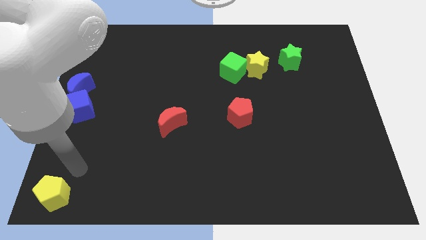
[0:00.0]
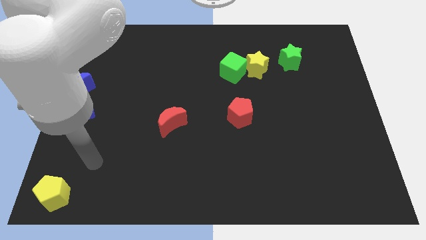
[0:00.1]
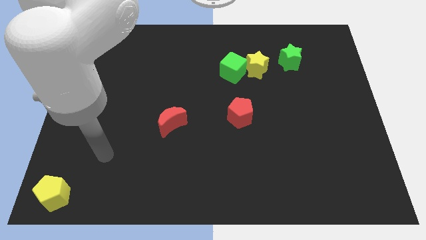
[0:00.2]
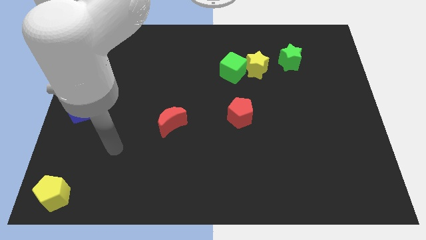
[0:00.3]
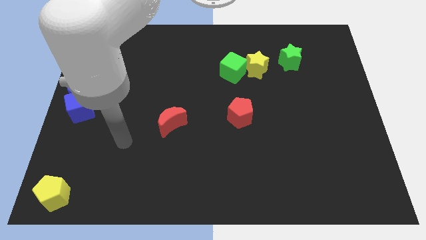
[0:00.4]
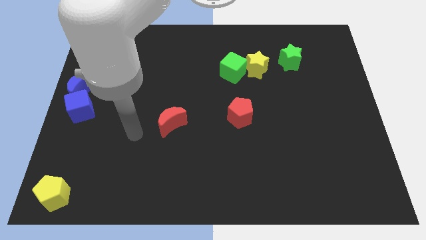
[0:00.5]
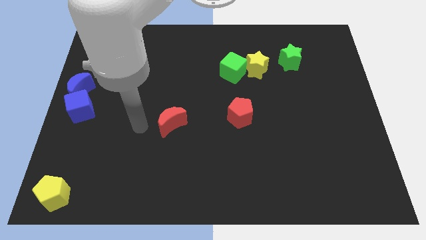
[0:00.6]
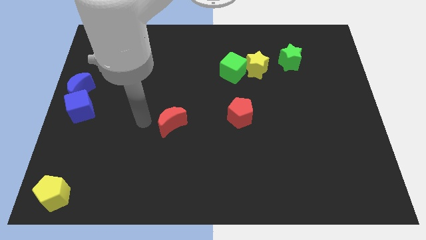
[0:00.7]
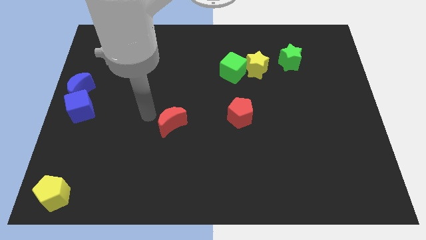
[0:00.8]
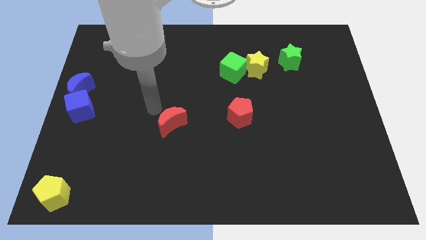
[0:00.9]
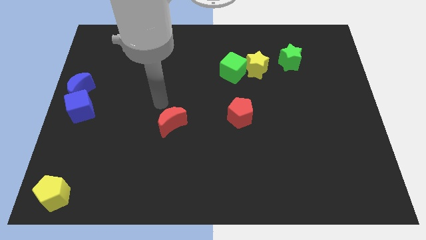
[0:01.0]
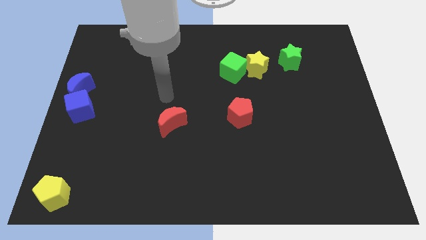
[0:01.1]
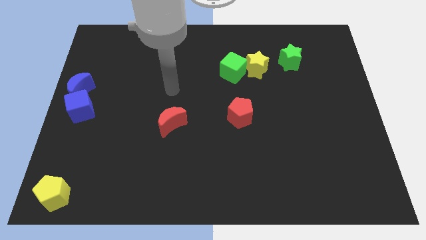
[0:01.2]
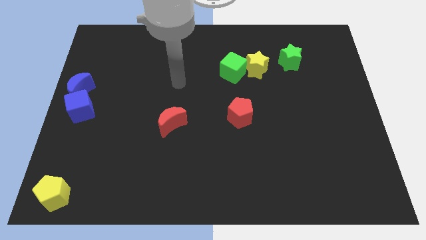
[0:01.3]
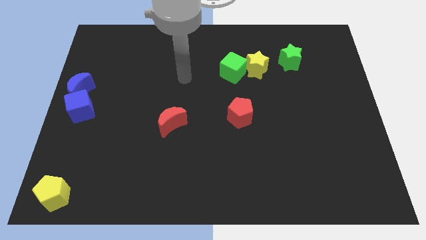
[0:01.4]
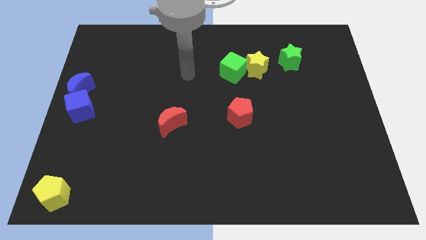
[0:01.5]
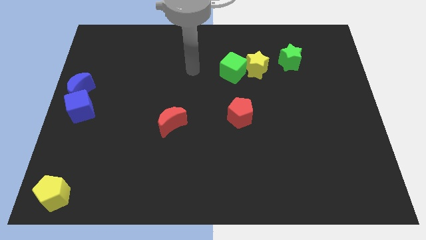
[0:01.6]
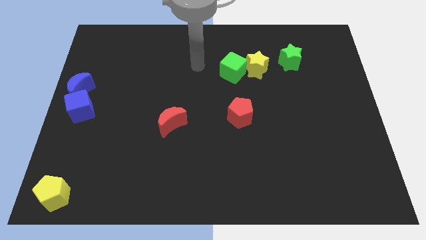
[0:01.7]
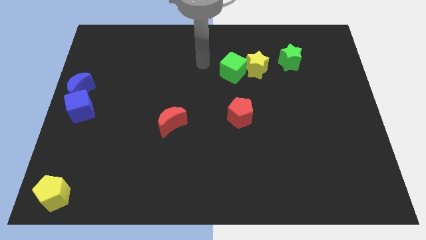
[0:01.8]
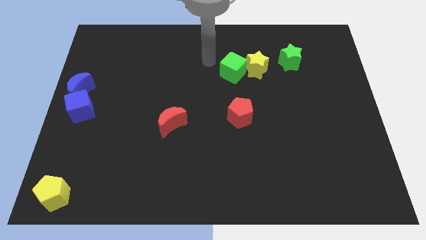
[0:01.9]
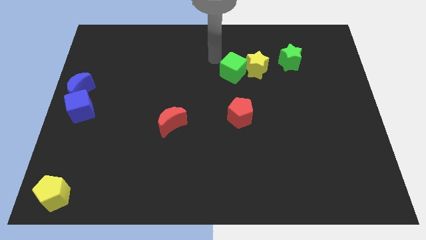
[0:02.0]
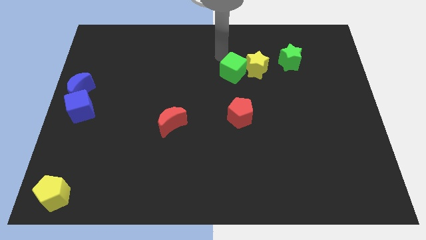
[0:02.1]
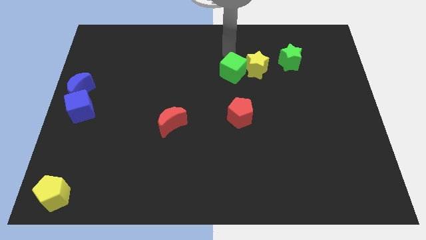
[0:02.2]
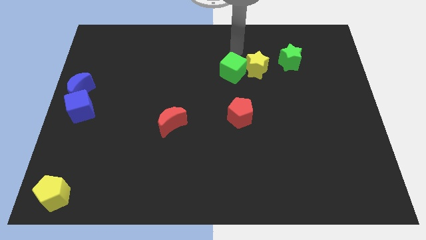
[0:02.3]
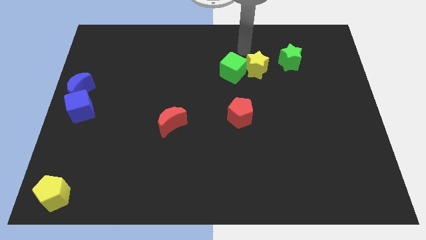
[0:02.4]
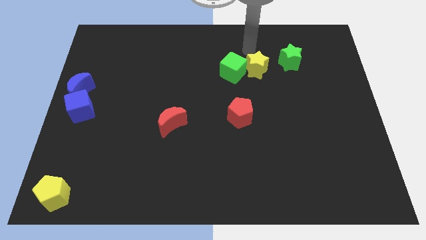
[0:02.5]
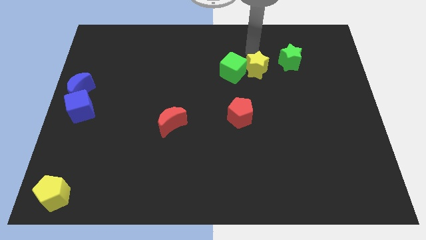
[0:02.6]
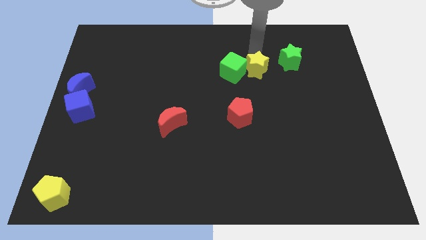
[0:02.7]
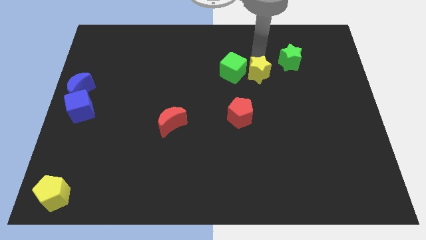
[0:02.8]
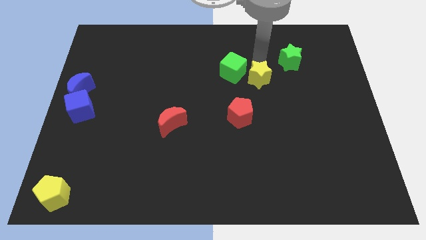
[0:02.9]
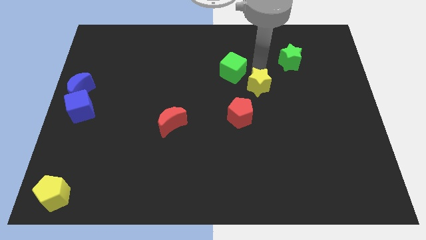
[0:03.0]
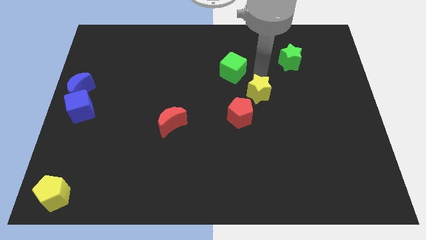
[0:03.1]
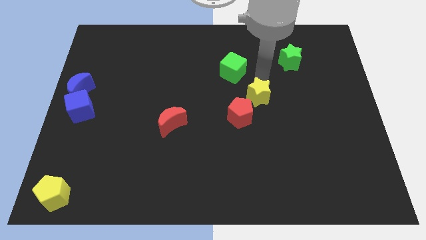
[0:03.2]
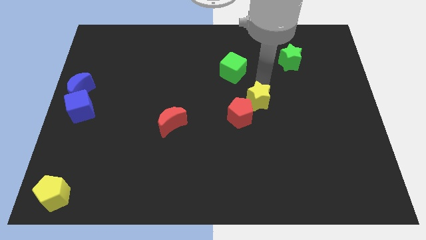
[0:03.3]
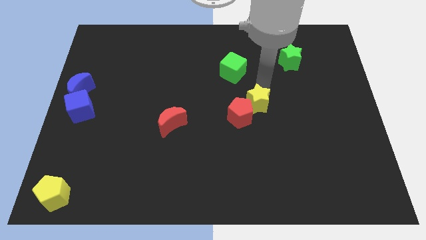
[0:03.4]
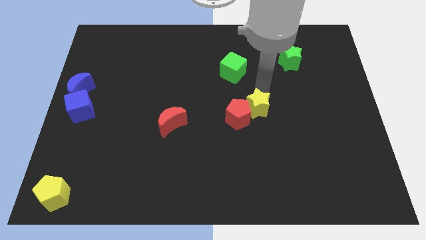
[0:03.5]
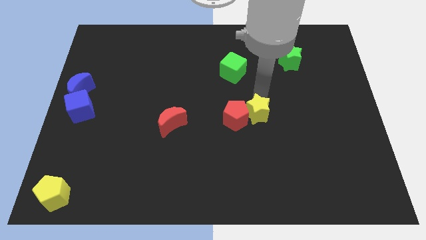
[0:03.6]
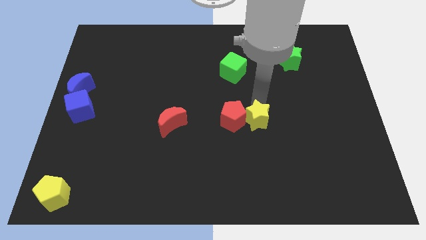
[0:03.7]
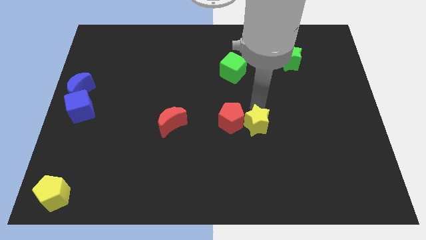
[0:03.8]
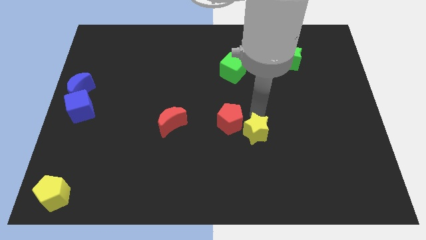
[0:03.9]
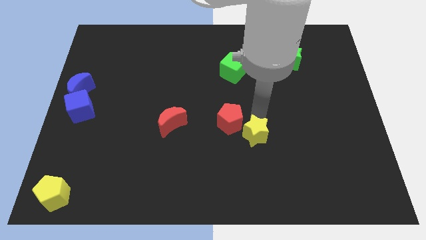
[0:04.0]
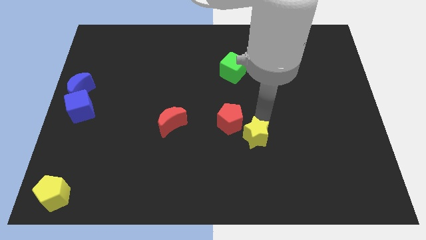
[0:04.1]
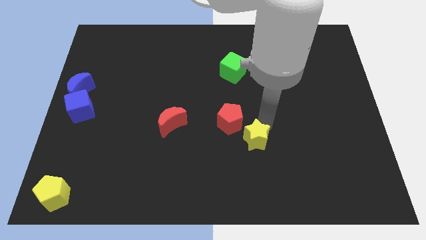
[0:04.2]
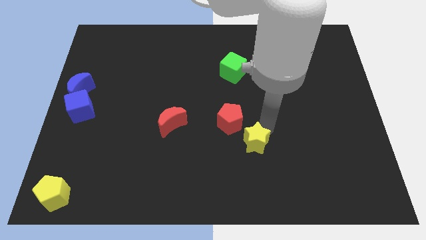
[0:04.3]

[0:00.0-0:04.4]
push the yellow star diagonally to the bottom right of the red pentagon

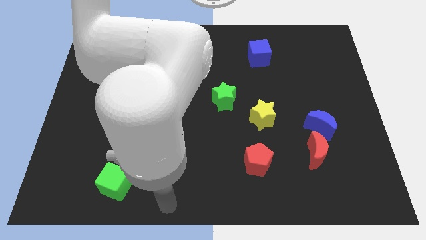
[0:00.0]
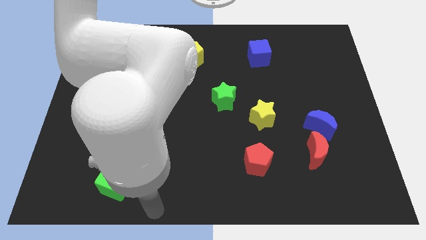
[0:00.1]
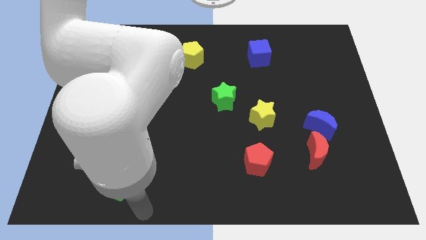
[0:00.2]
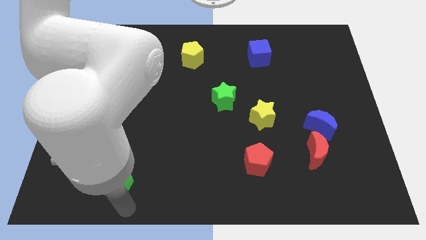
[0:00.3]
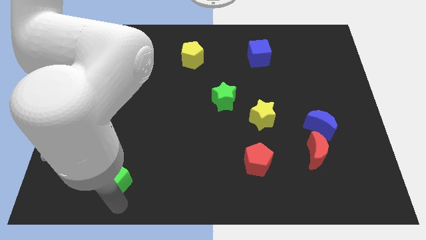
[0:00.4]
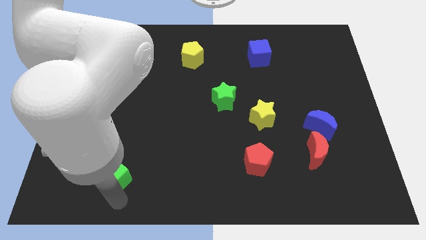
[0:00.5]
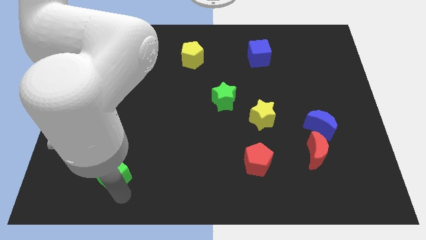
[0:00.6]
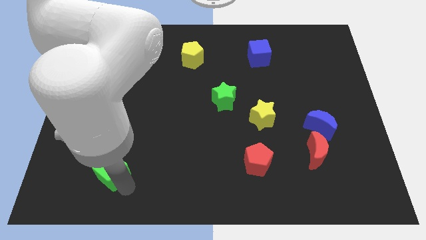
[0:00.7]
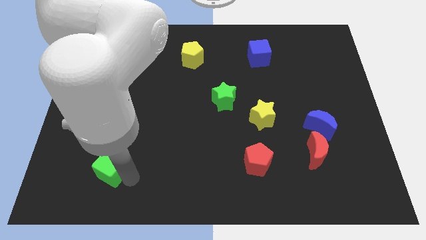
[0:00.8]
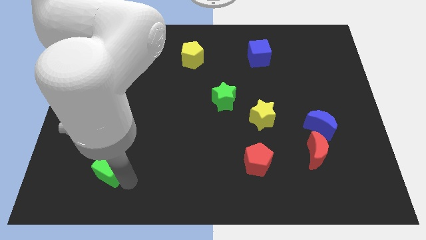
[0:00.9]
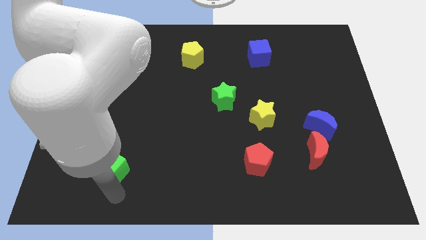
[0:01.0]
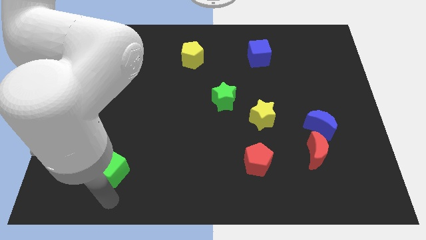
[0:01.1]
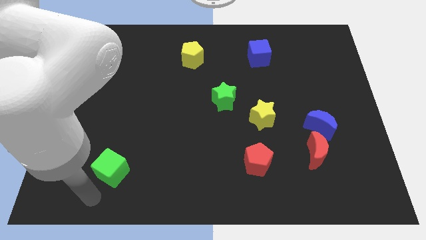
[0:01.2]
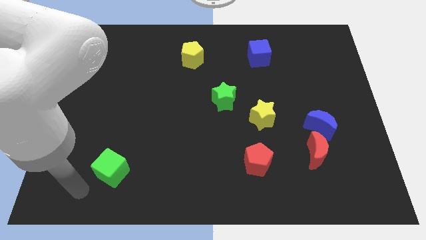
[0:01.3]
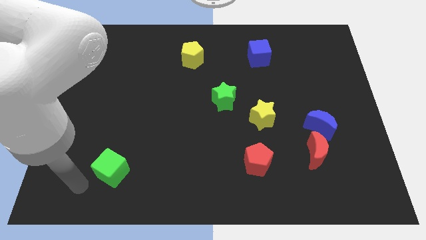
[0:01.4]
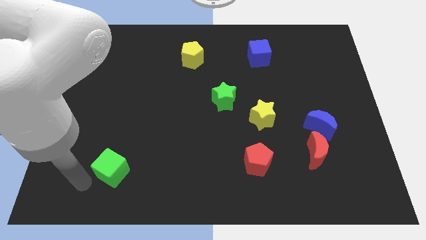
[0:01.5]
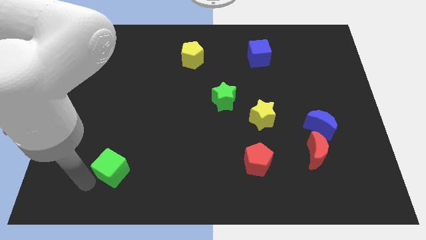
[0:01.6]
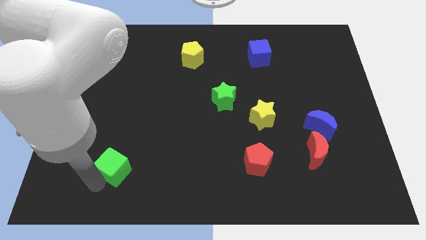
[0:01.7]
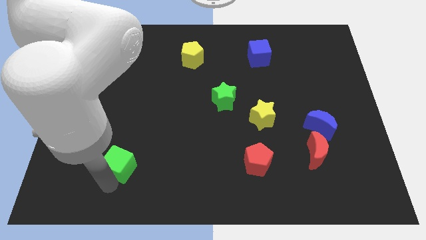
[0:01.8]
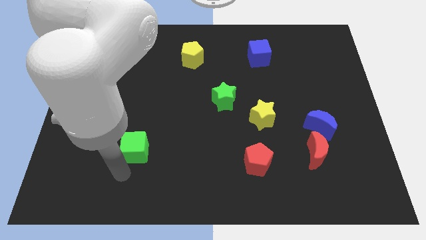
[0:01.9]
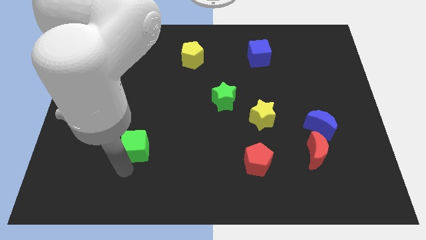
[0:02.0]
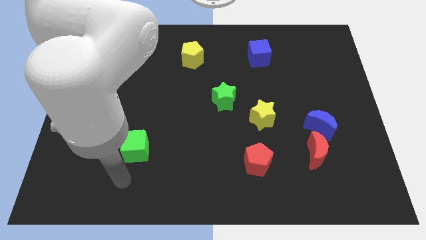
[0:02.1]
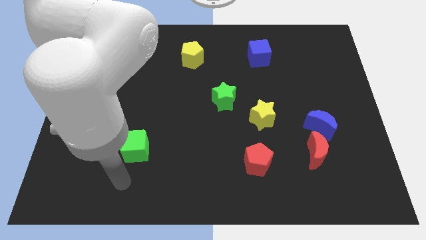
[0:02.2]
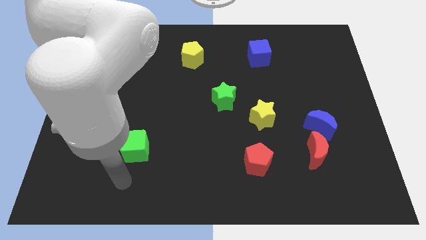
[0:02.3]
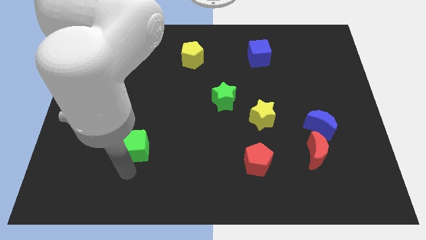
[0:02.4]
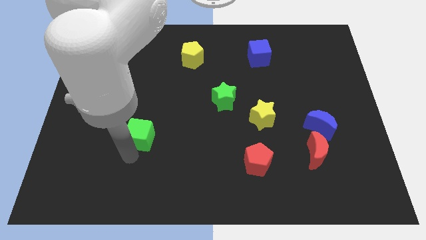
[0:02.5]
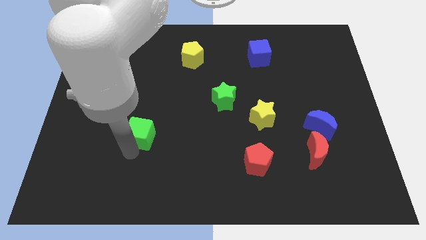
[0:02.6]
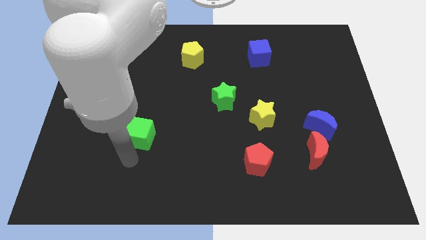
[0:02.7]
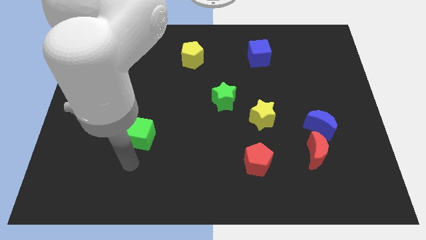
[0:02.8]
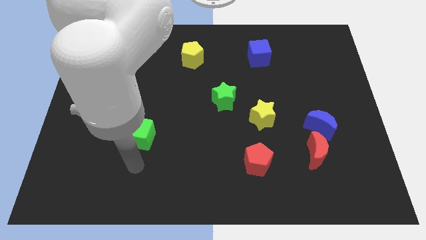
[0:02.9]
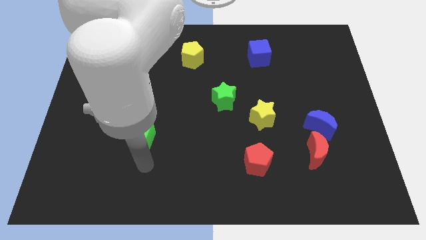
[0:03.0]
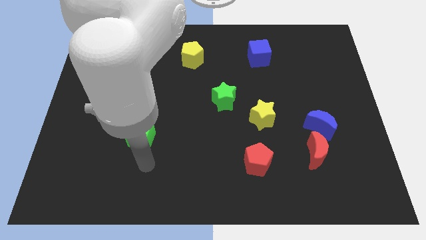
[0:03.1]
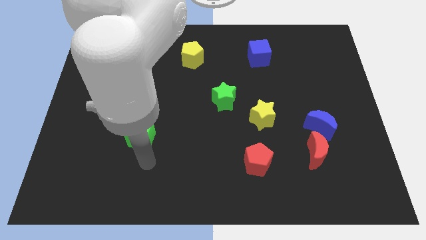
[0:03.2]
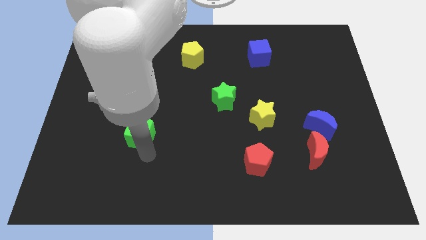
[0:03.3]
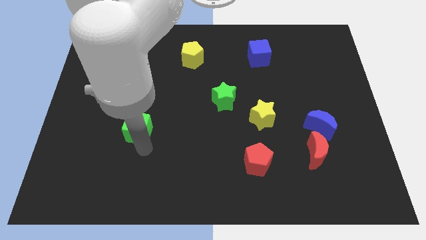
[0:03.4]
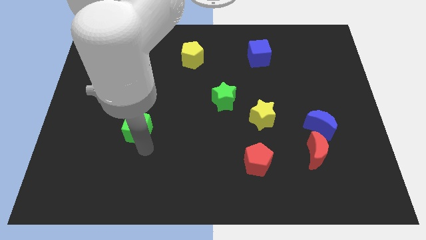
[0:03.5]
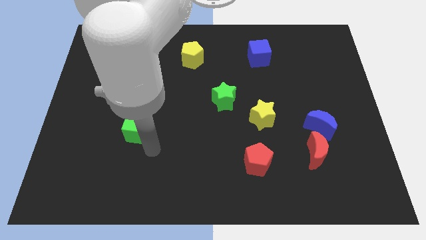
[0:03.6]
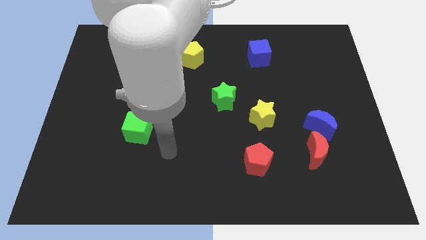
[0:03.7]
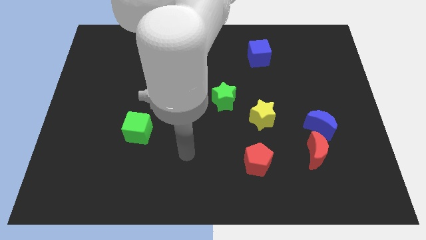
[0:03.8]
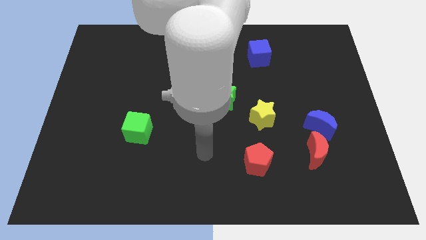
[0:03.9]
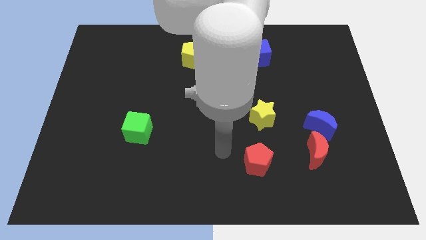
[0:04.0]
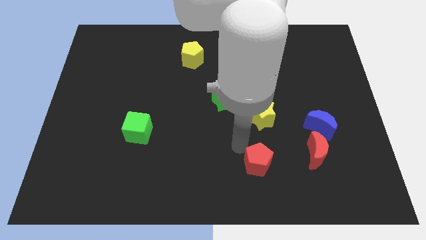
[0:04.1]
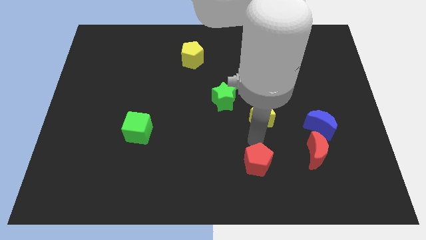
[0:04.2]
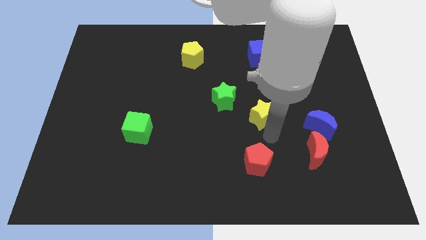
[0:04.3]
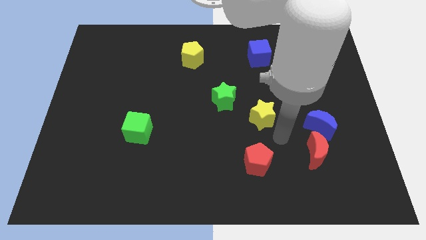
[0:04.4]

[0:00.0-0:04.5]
push the green cube diagonally top left to the red pentagon
